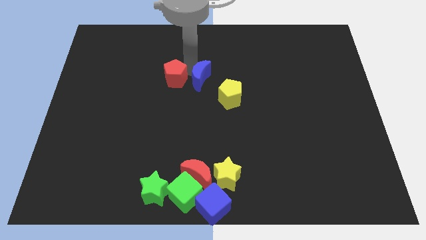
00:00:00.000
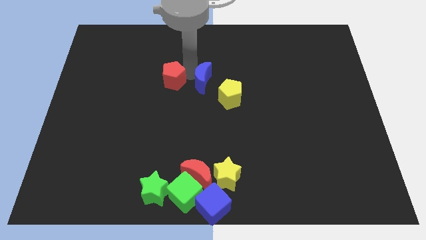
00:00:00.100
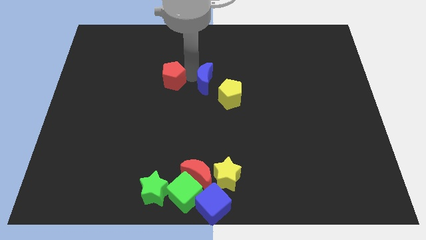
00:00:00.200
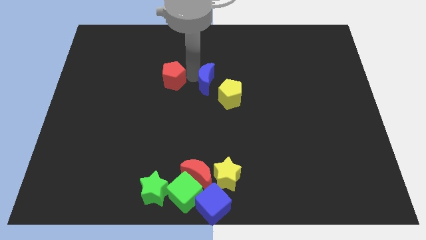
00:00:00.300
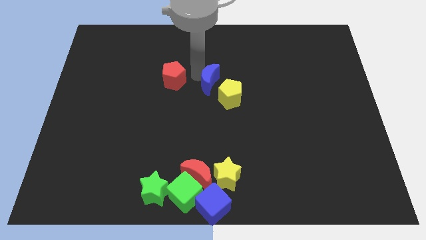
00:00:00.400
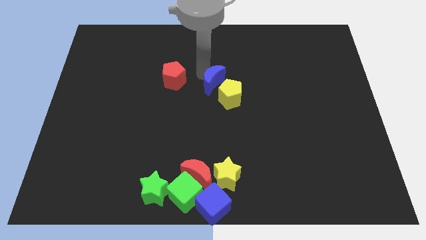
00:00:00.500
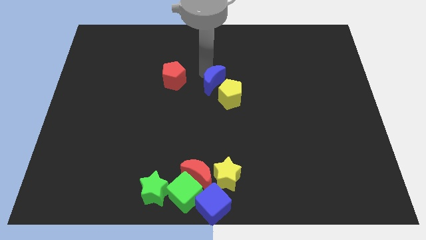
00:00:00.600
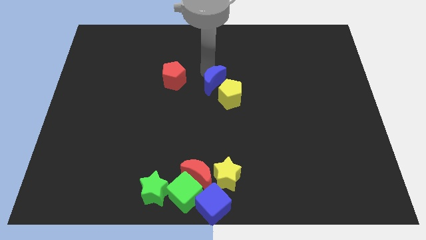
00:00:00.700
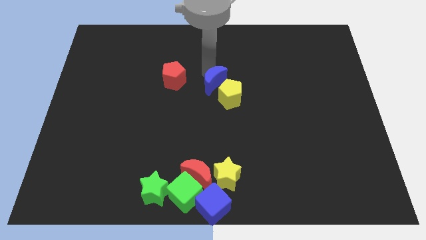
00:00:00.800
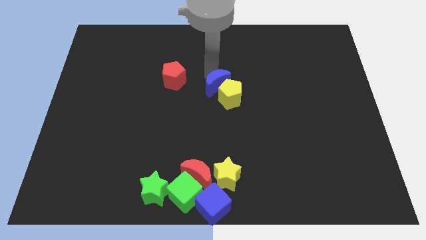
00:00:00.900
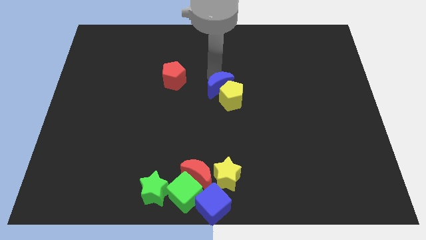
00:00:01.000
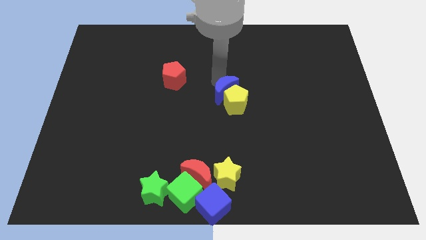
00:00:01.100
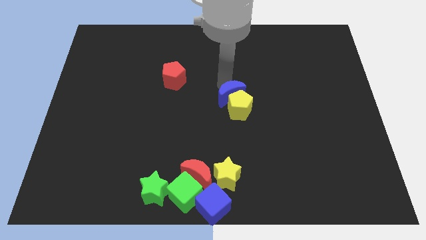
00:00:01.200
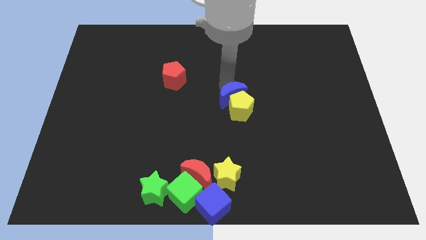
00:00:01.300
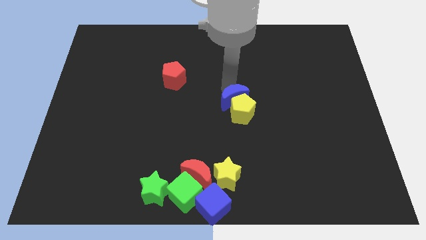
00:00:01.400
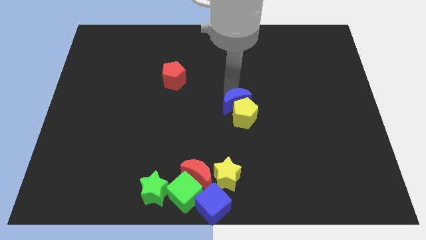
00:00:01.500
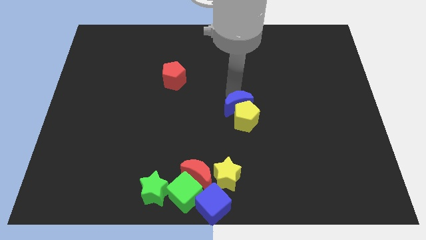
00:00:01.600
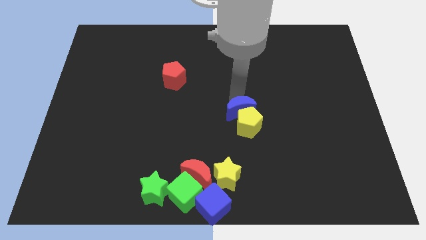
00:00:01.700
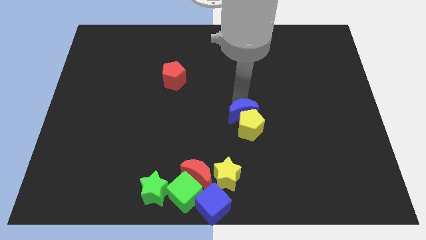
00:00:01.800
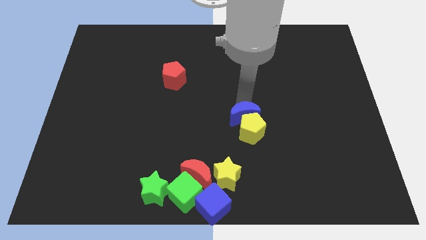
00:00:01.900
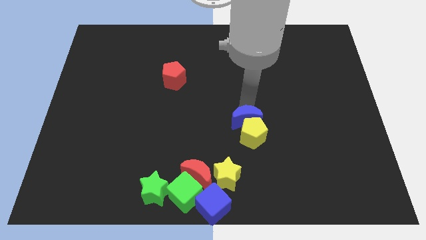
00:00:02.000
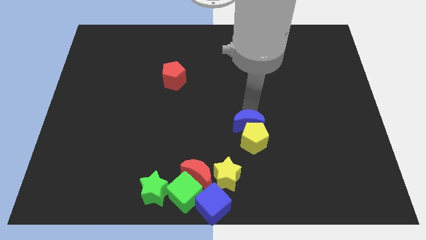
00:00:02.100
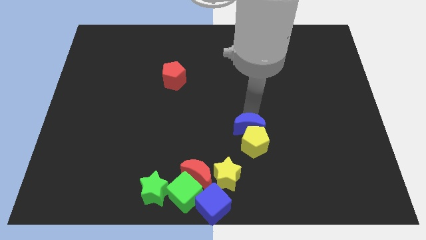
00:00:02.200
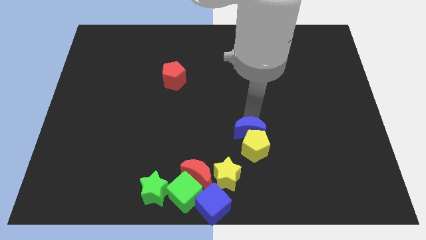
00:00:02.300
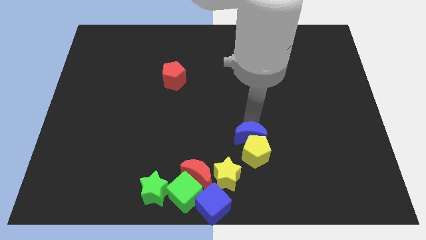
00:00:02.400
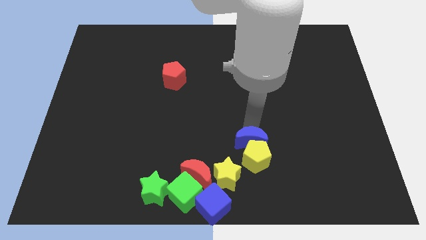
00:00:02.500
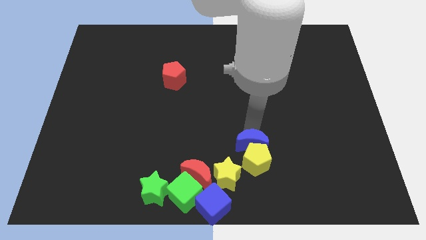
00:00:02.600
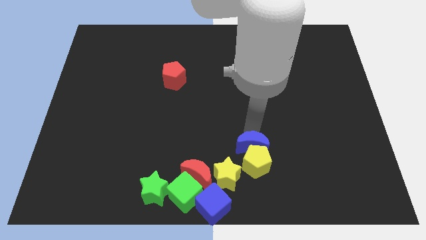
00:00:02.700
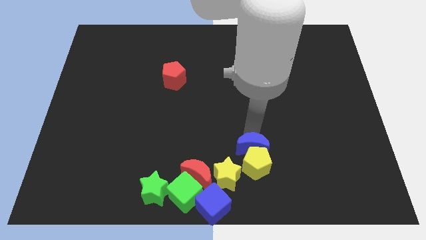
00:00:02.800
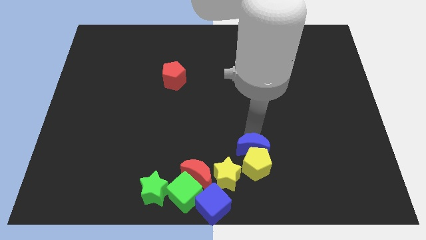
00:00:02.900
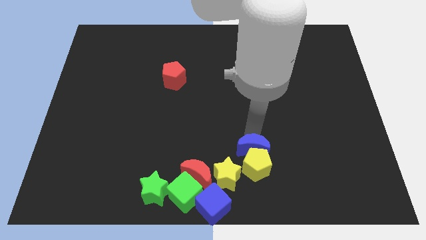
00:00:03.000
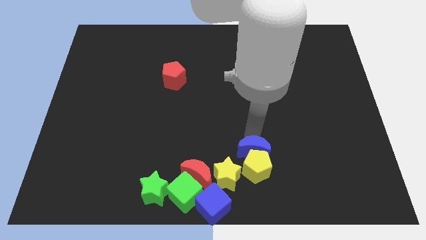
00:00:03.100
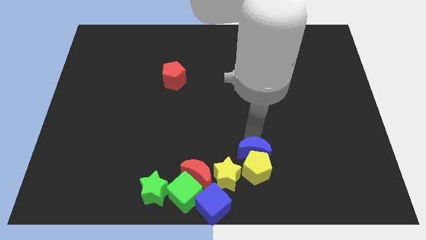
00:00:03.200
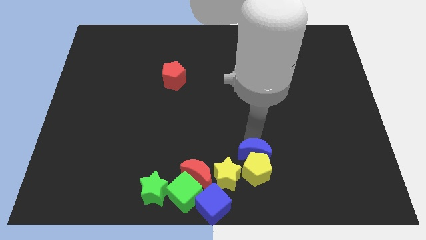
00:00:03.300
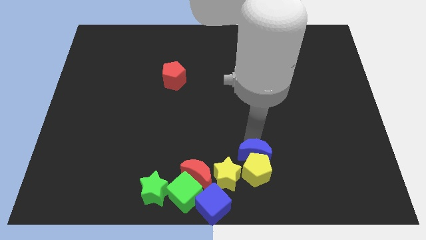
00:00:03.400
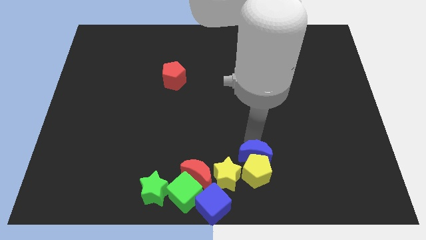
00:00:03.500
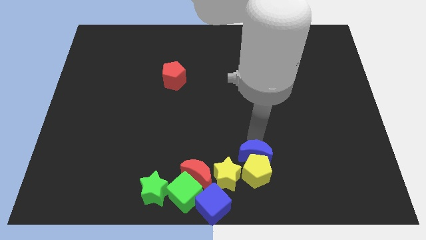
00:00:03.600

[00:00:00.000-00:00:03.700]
push the blue crescent along with the yellow pentagon to the right of the yellow star

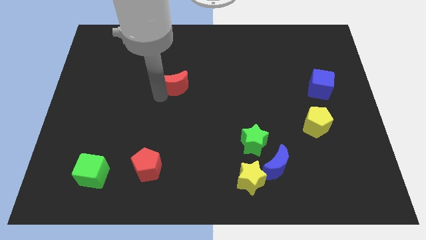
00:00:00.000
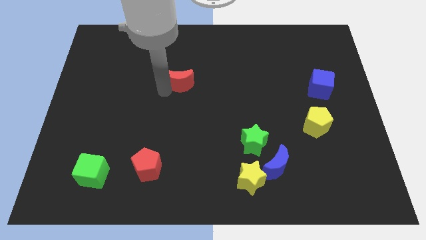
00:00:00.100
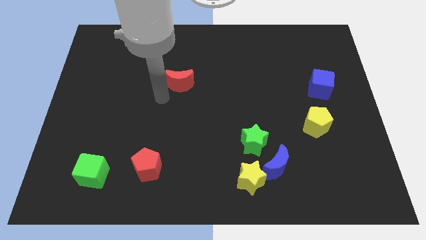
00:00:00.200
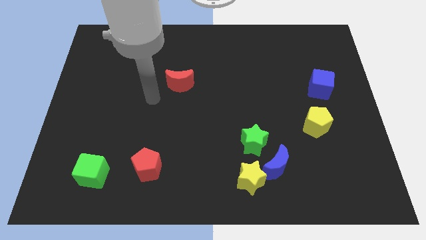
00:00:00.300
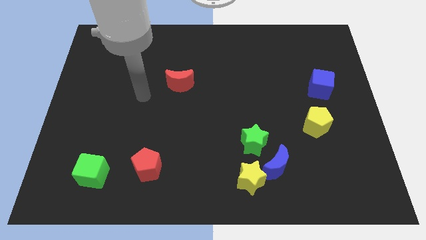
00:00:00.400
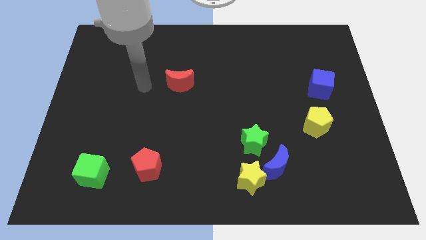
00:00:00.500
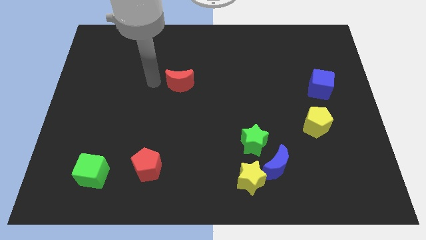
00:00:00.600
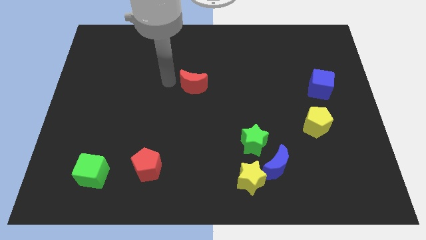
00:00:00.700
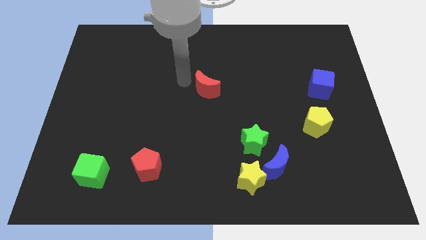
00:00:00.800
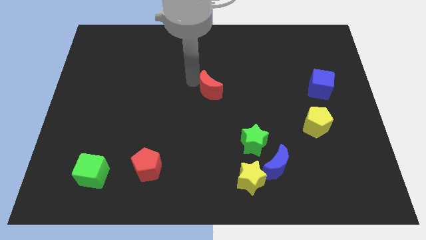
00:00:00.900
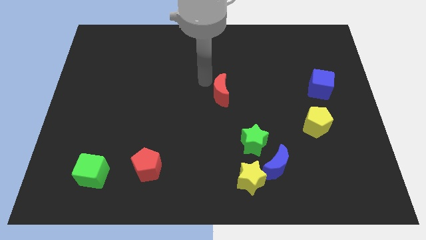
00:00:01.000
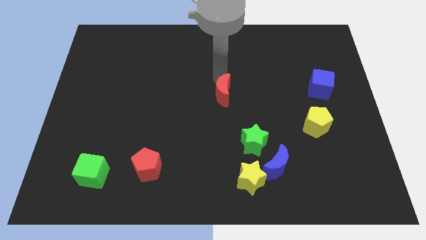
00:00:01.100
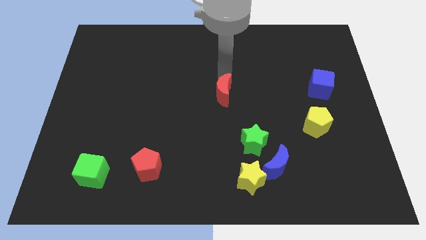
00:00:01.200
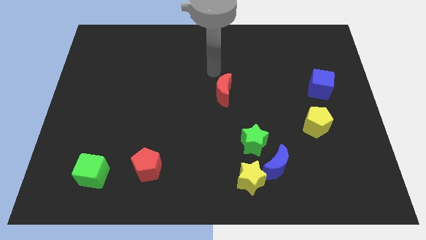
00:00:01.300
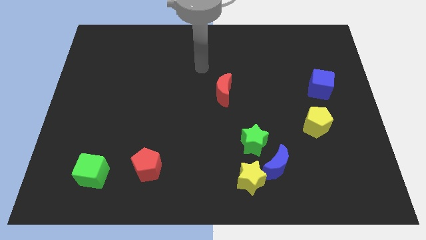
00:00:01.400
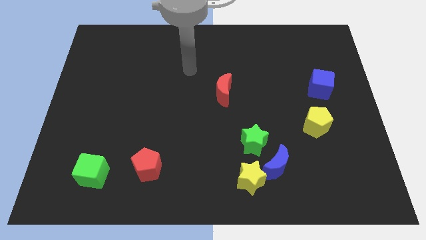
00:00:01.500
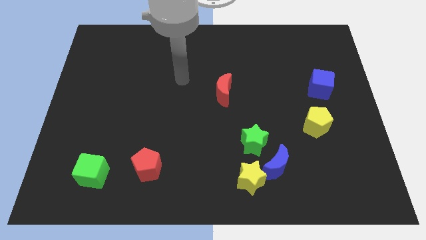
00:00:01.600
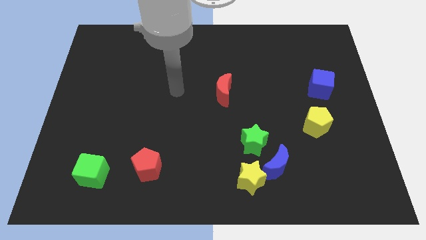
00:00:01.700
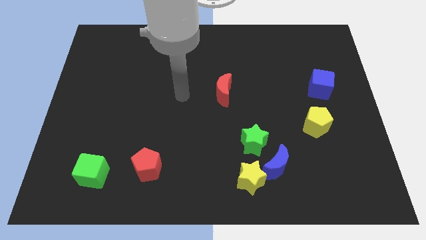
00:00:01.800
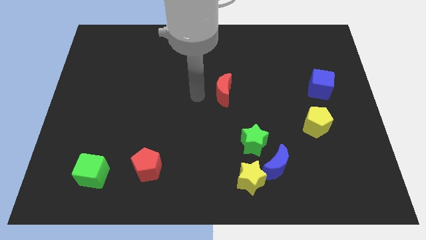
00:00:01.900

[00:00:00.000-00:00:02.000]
move the red crescent towards the center of the board

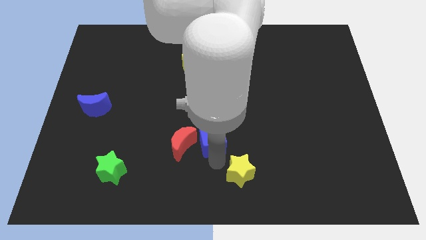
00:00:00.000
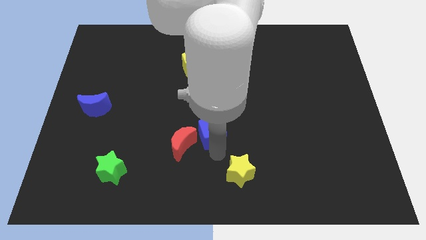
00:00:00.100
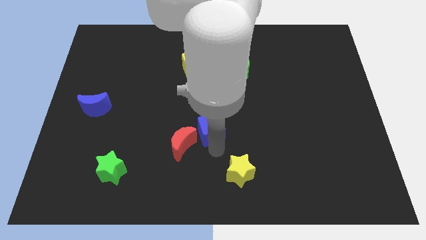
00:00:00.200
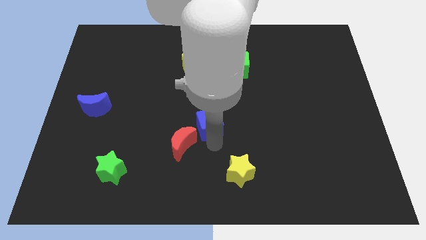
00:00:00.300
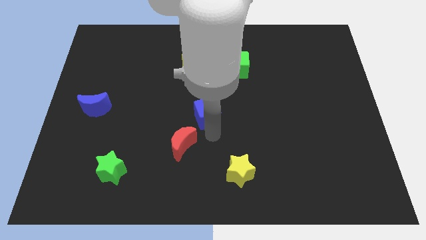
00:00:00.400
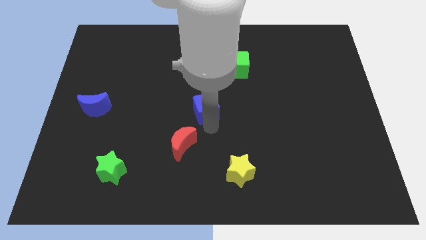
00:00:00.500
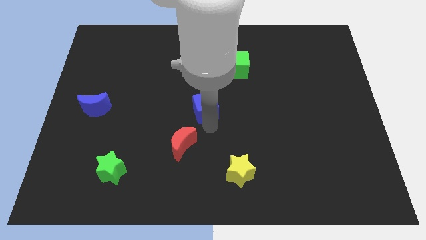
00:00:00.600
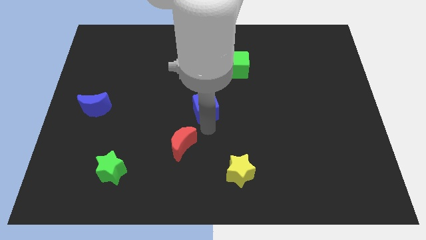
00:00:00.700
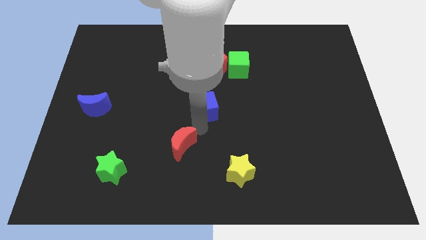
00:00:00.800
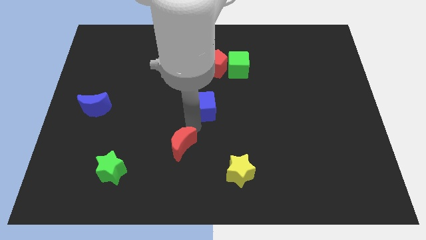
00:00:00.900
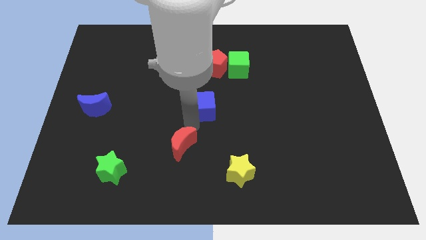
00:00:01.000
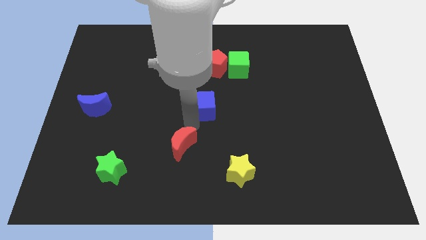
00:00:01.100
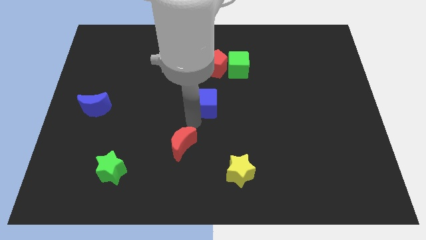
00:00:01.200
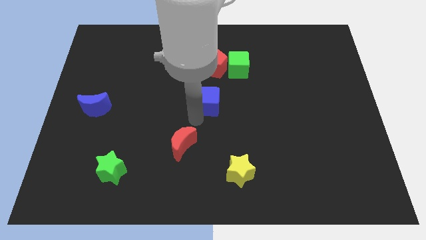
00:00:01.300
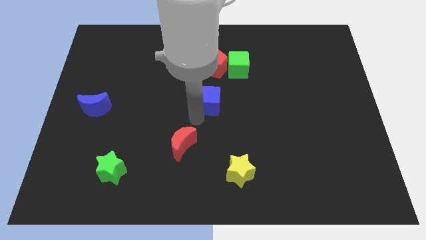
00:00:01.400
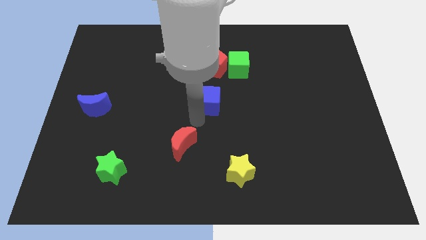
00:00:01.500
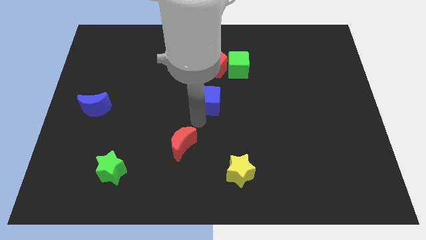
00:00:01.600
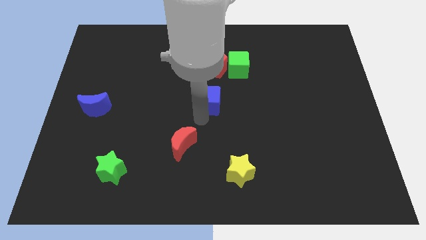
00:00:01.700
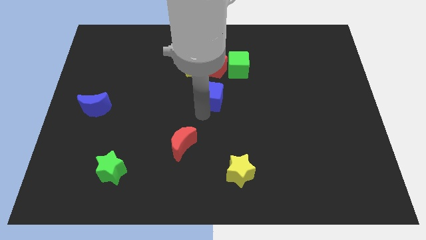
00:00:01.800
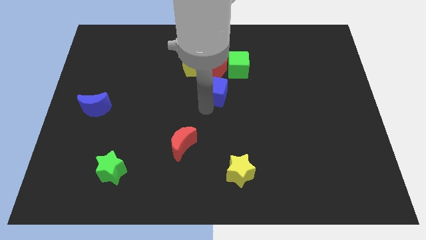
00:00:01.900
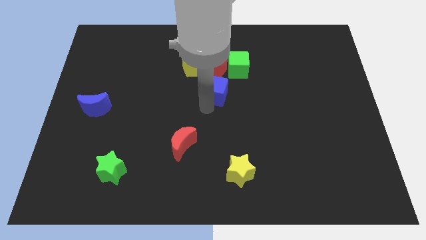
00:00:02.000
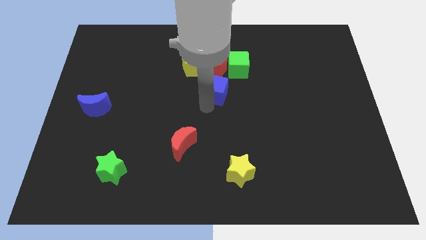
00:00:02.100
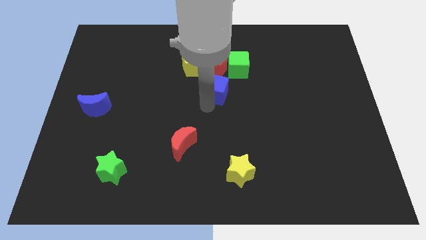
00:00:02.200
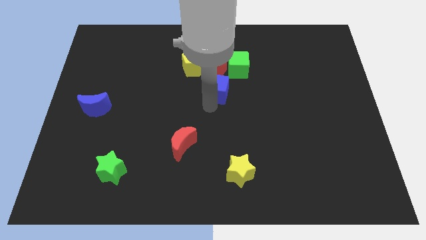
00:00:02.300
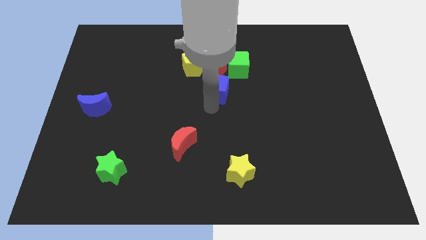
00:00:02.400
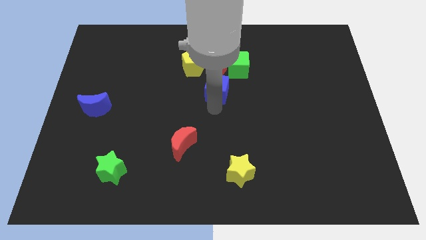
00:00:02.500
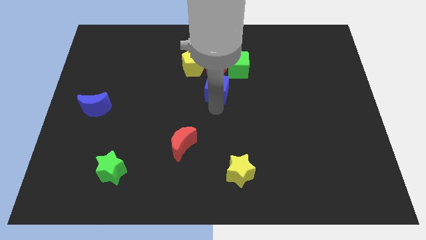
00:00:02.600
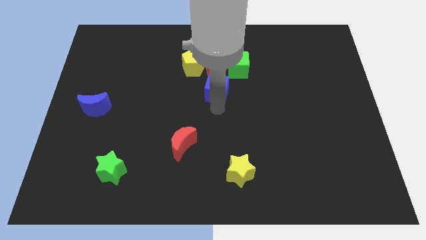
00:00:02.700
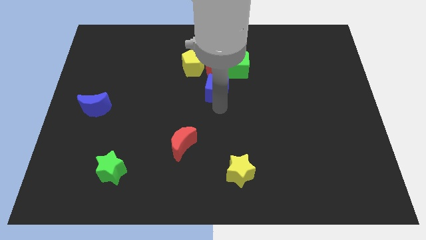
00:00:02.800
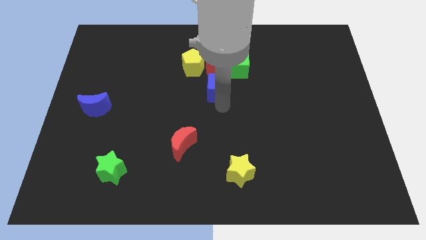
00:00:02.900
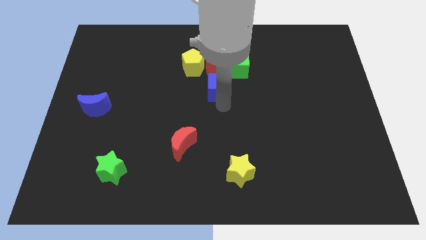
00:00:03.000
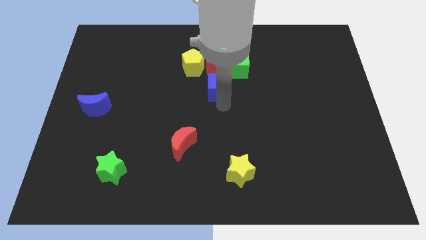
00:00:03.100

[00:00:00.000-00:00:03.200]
slide the blue cube into the red pentagon
